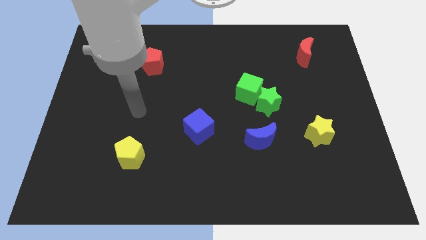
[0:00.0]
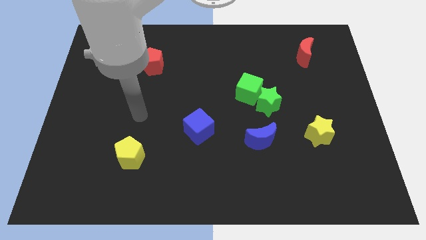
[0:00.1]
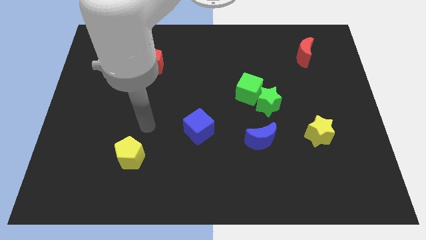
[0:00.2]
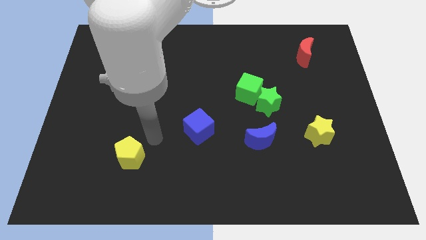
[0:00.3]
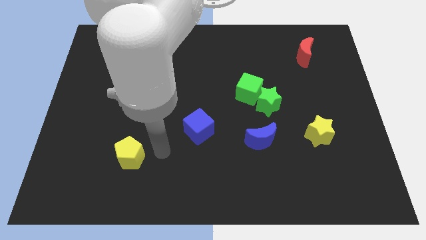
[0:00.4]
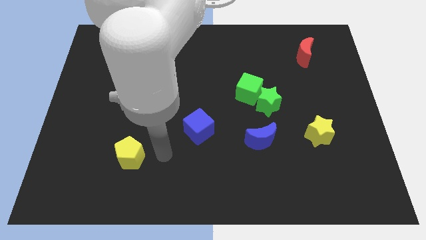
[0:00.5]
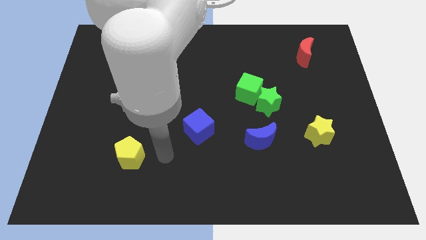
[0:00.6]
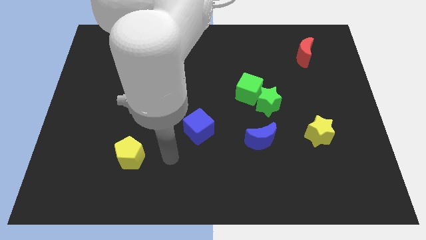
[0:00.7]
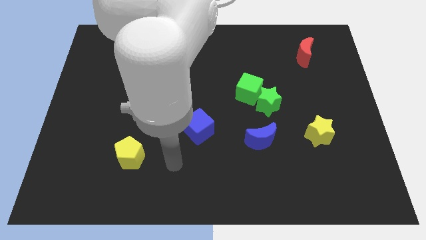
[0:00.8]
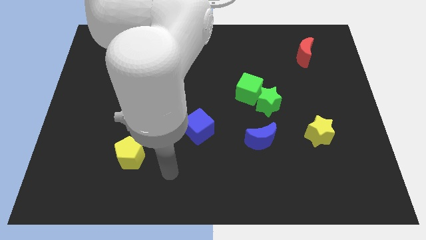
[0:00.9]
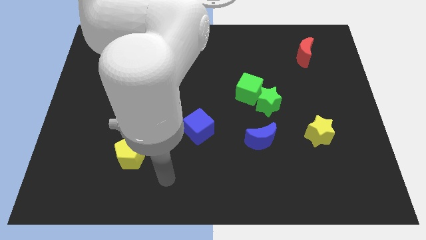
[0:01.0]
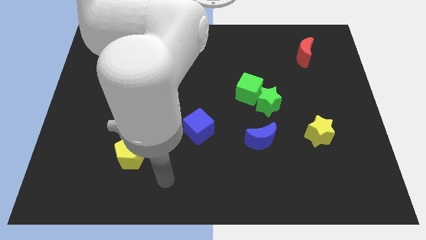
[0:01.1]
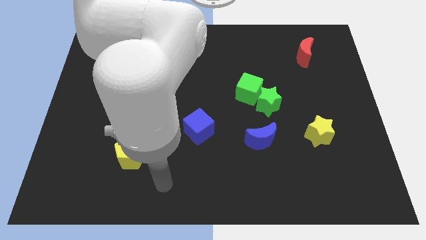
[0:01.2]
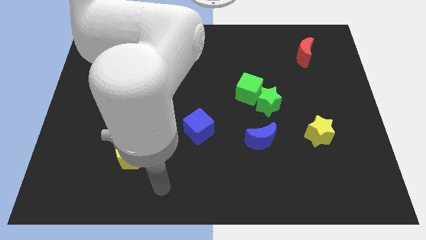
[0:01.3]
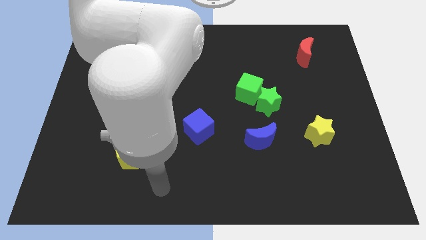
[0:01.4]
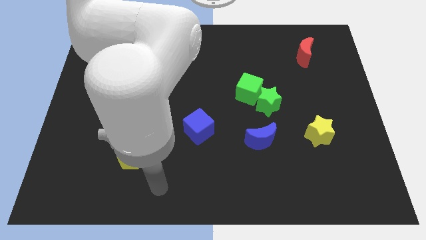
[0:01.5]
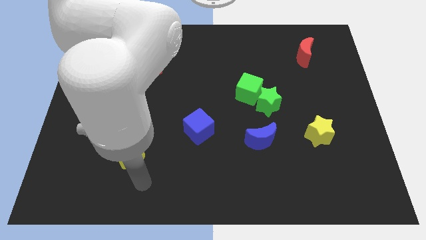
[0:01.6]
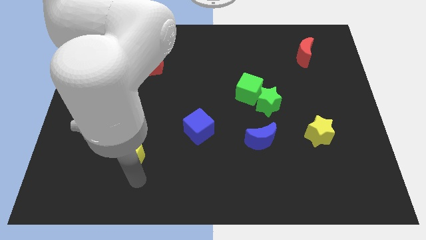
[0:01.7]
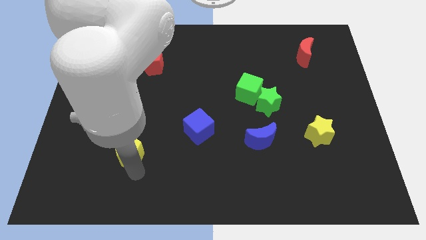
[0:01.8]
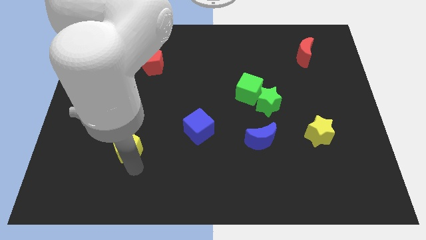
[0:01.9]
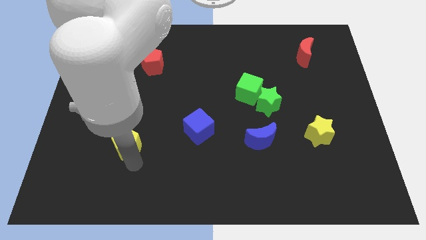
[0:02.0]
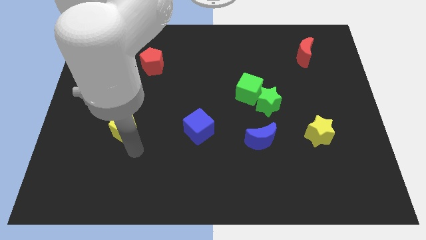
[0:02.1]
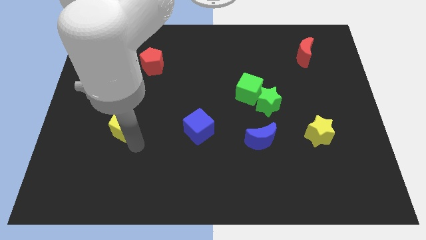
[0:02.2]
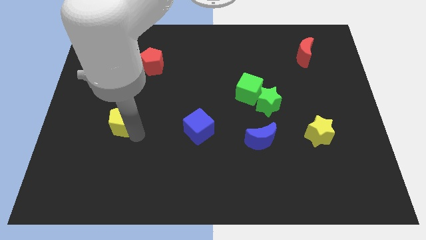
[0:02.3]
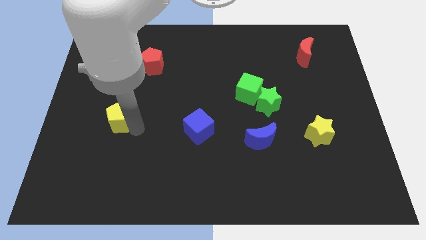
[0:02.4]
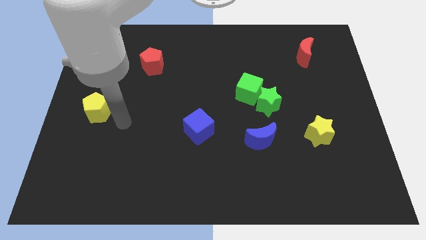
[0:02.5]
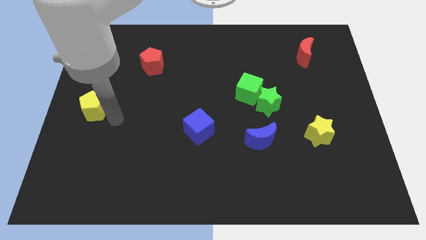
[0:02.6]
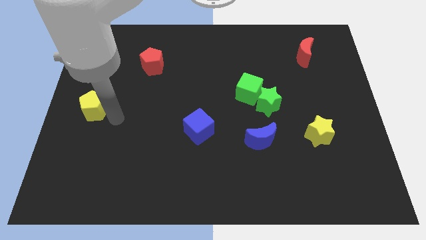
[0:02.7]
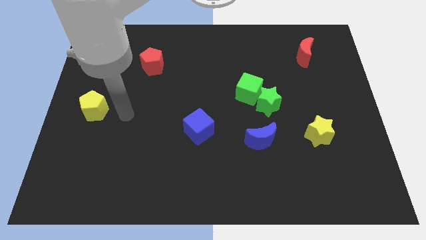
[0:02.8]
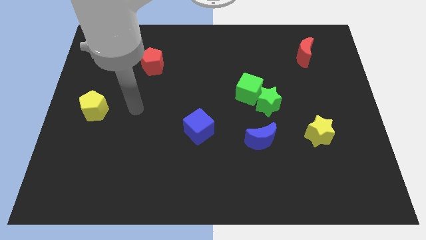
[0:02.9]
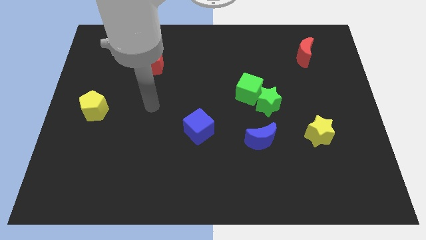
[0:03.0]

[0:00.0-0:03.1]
push the yellow pentagon to the bottom left of the red pentagon

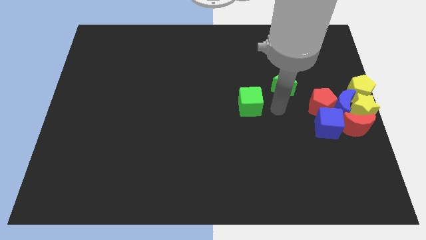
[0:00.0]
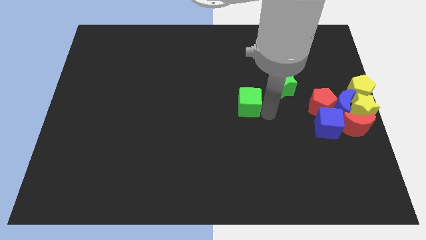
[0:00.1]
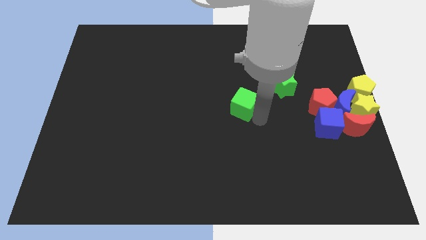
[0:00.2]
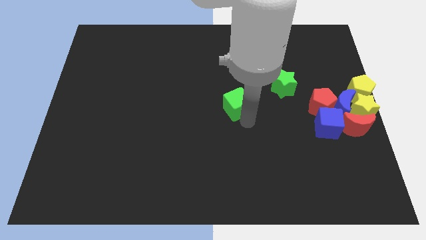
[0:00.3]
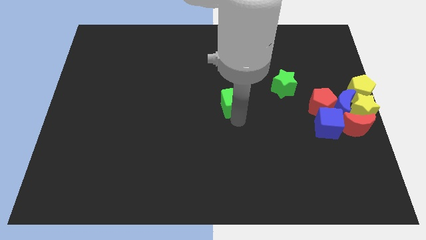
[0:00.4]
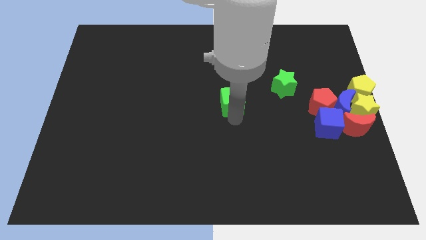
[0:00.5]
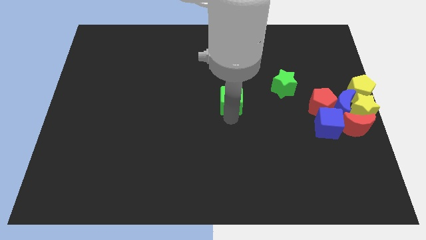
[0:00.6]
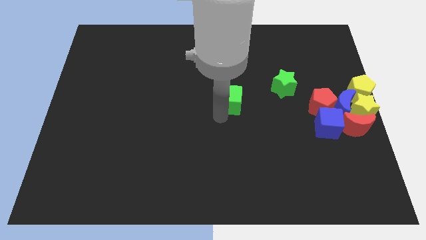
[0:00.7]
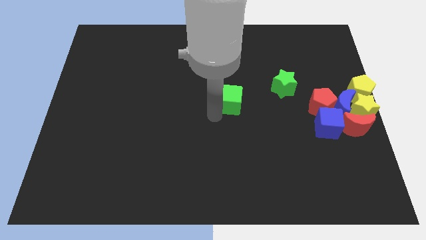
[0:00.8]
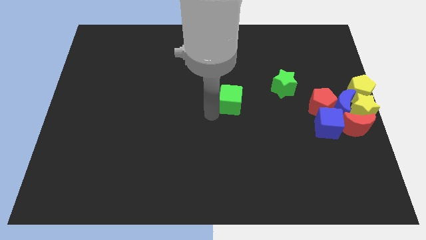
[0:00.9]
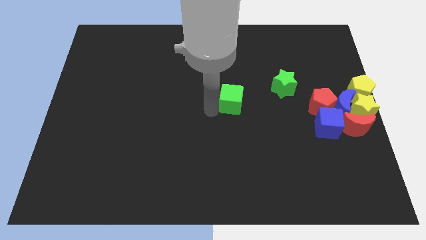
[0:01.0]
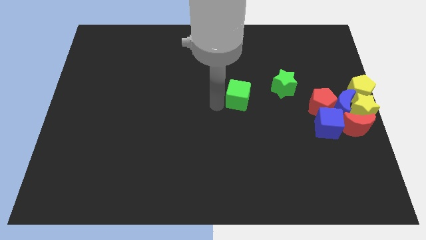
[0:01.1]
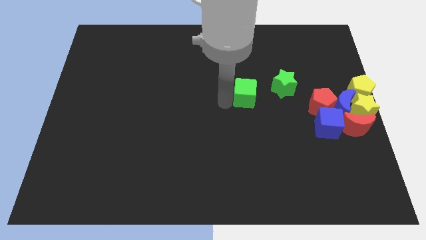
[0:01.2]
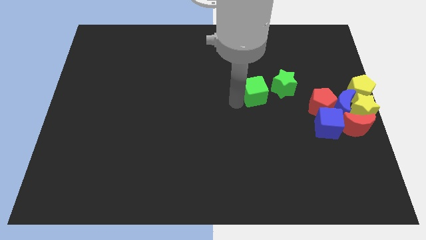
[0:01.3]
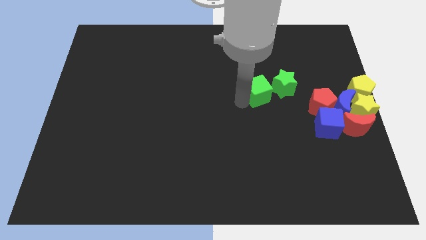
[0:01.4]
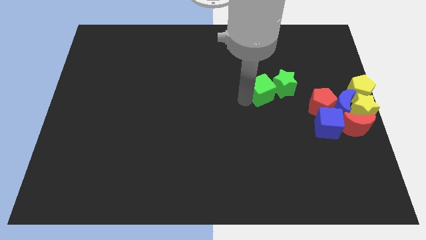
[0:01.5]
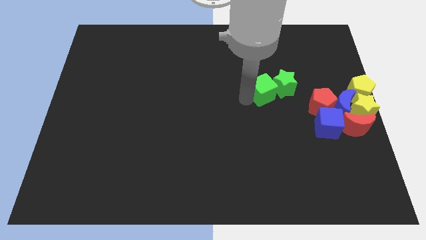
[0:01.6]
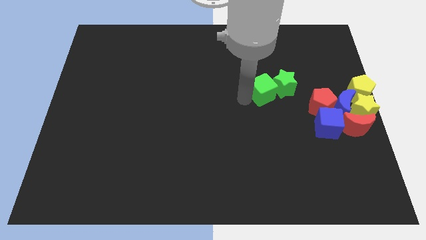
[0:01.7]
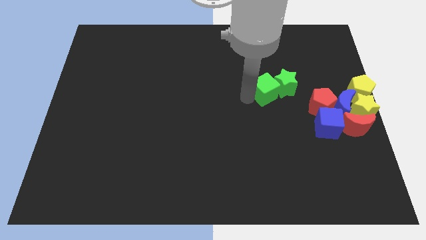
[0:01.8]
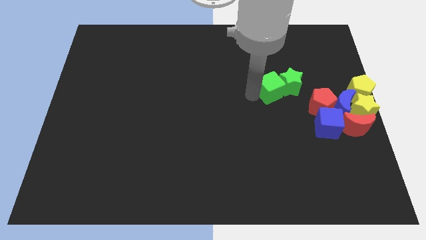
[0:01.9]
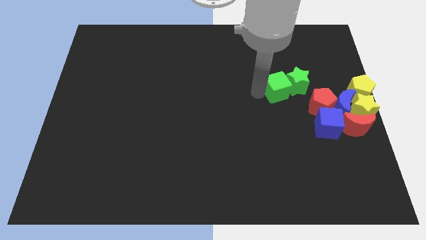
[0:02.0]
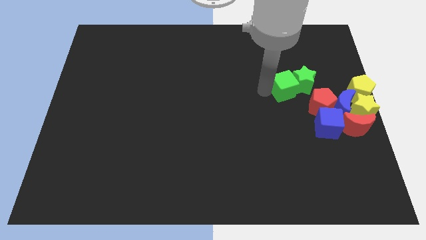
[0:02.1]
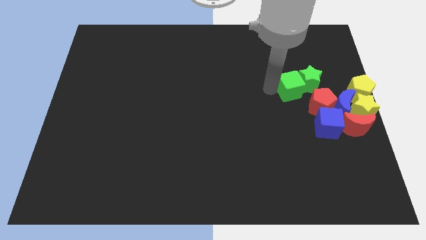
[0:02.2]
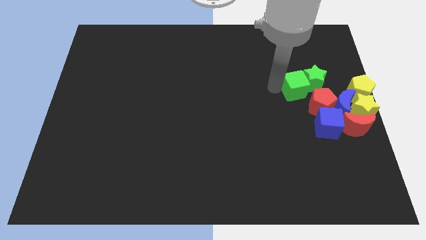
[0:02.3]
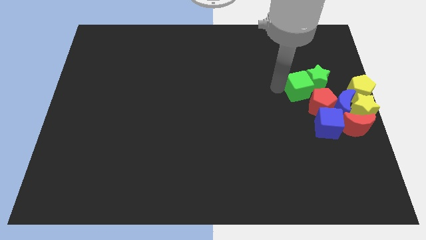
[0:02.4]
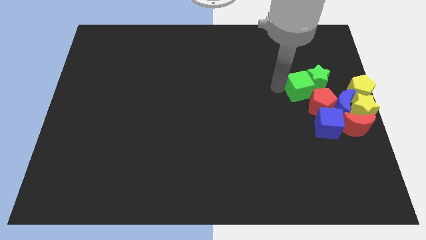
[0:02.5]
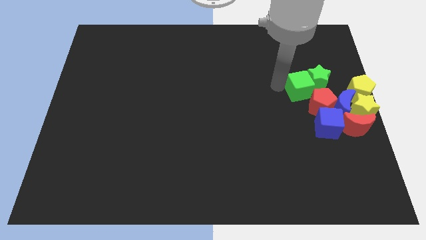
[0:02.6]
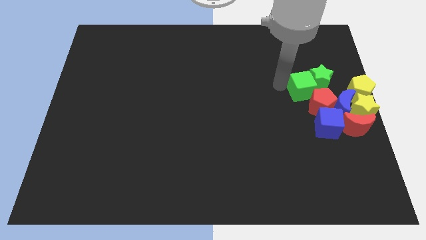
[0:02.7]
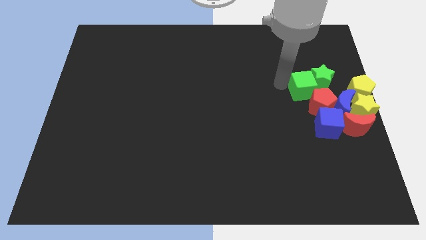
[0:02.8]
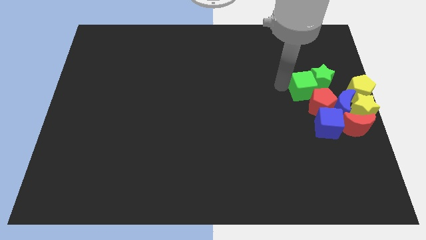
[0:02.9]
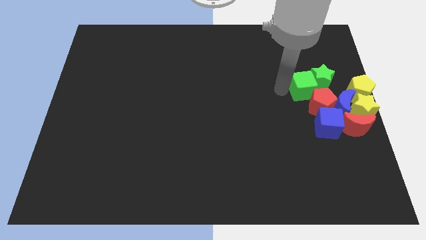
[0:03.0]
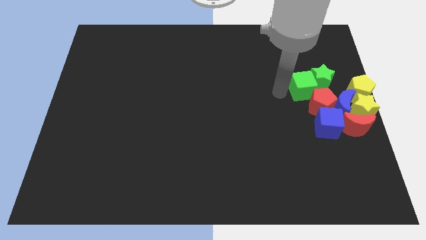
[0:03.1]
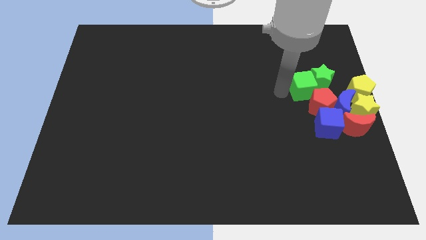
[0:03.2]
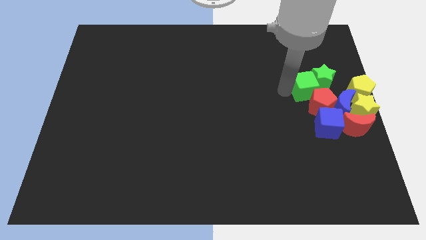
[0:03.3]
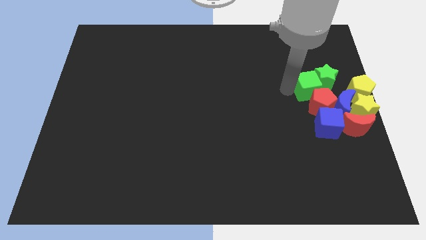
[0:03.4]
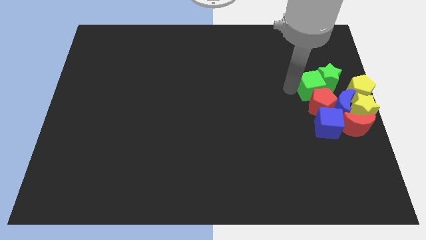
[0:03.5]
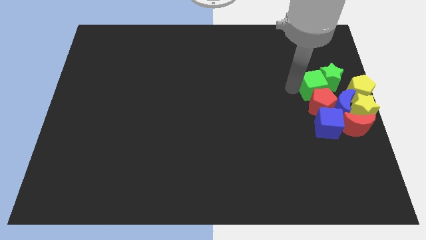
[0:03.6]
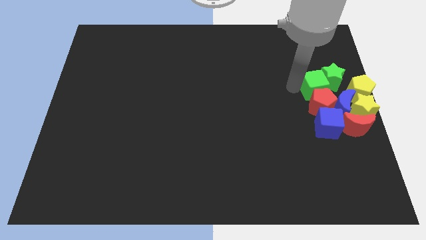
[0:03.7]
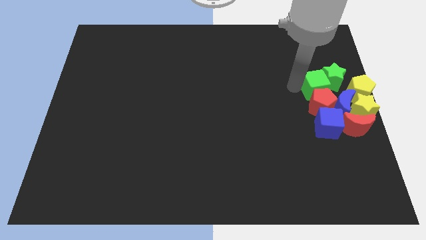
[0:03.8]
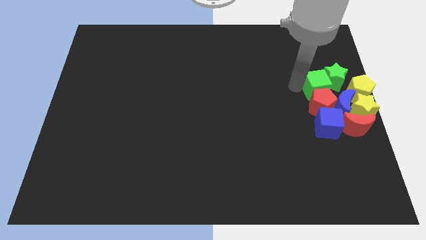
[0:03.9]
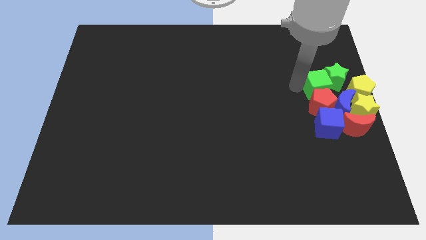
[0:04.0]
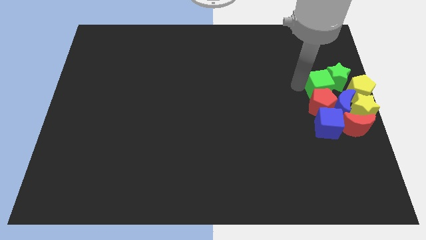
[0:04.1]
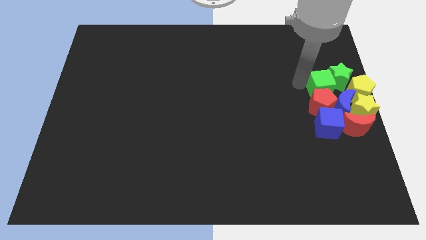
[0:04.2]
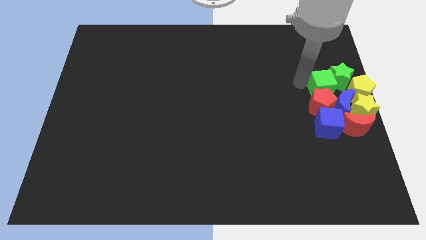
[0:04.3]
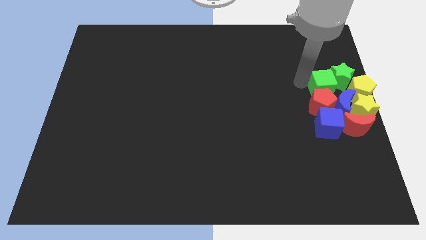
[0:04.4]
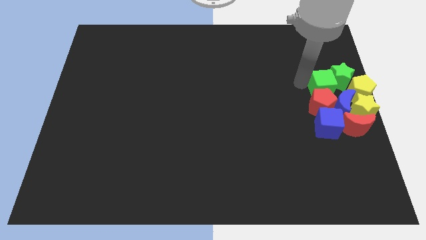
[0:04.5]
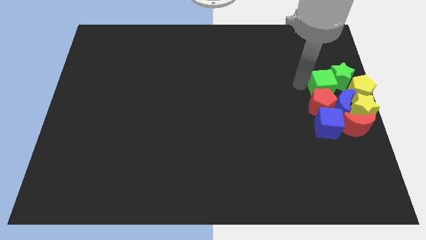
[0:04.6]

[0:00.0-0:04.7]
slide the green blocks into the group of blocks

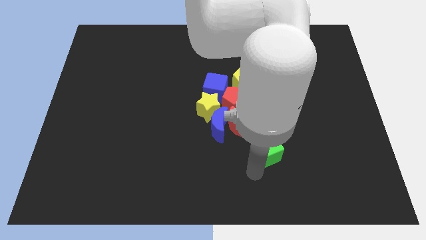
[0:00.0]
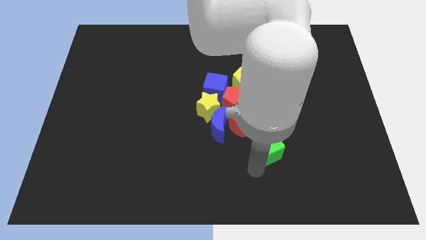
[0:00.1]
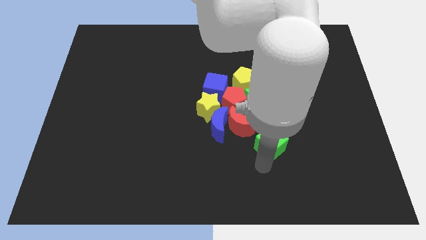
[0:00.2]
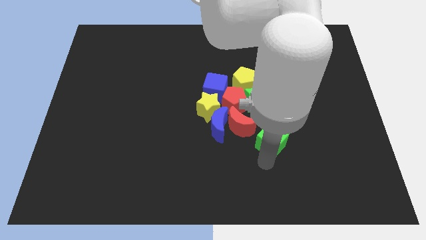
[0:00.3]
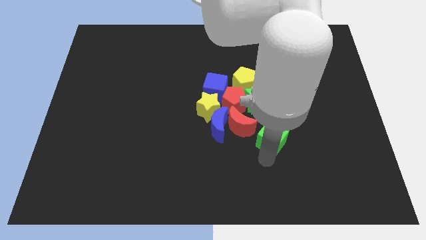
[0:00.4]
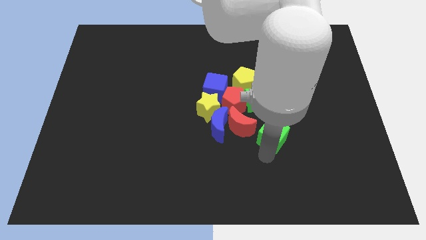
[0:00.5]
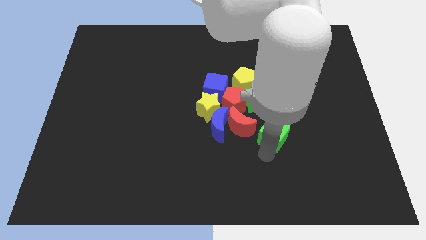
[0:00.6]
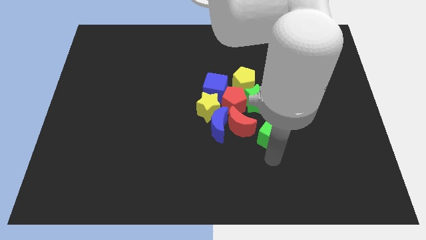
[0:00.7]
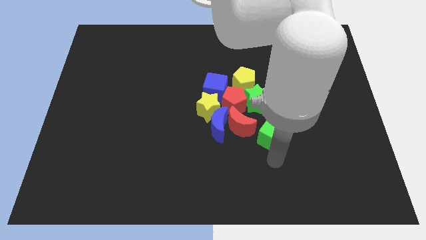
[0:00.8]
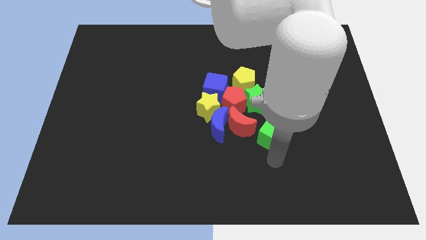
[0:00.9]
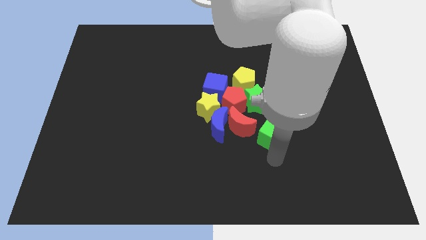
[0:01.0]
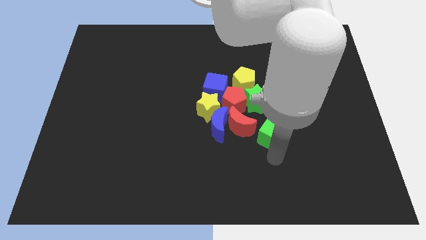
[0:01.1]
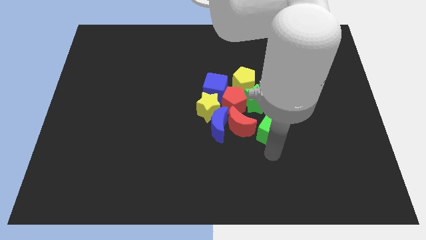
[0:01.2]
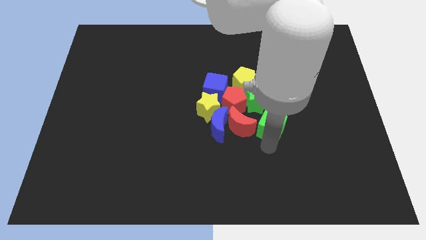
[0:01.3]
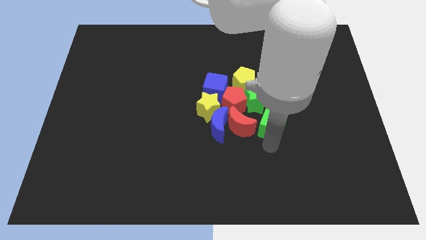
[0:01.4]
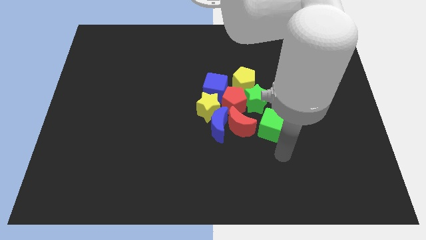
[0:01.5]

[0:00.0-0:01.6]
push the green cube close to the red pentagon
